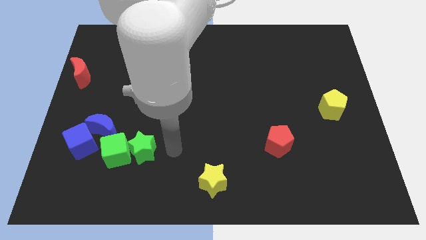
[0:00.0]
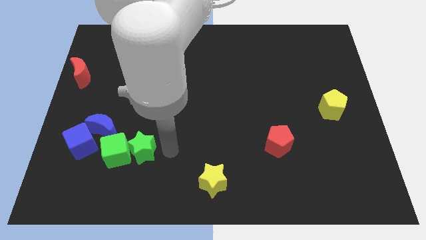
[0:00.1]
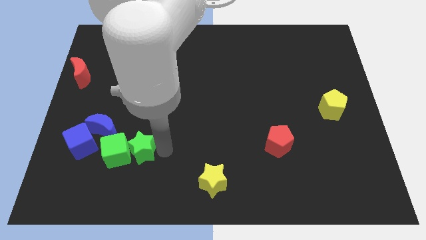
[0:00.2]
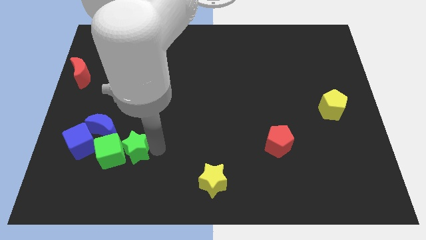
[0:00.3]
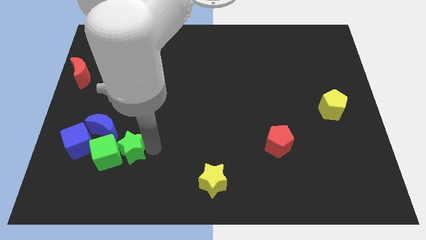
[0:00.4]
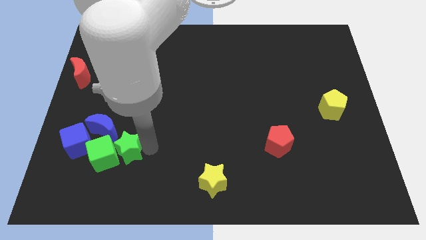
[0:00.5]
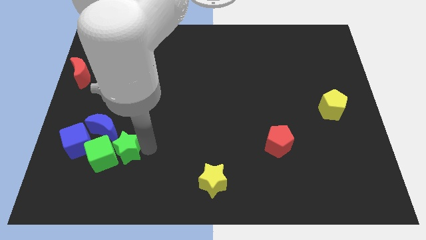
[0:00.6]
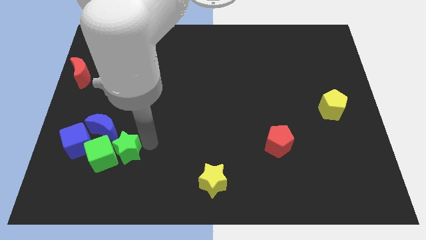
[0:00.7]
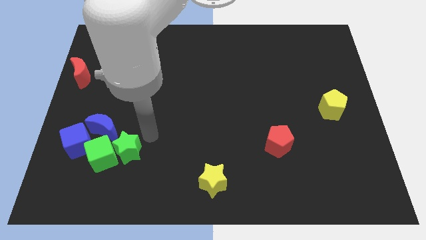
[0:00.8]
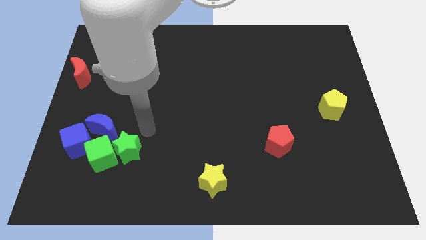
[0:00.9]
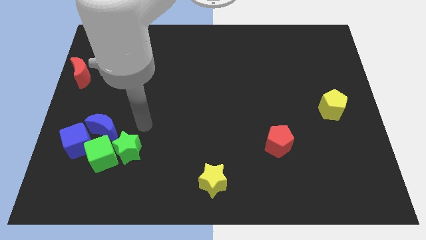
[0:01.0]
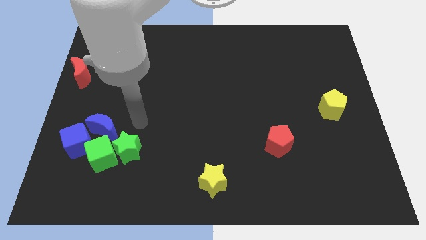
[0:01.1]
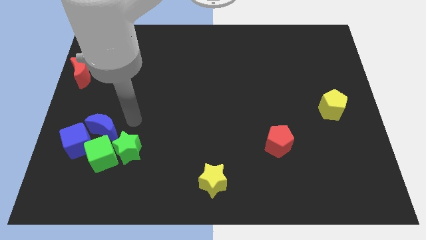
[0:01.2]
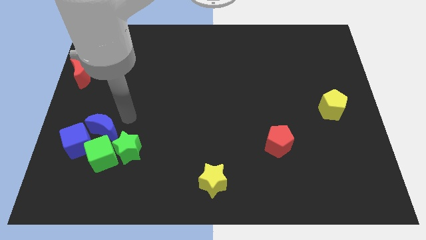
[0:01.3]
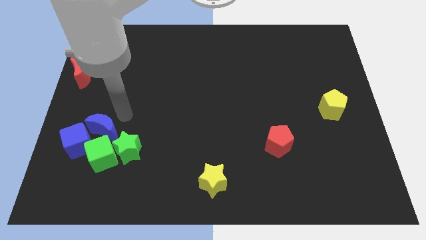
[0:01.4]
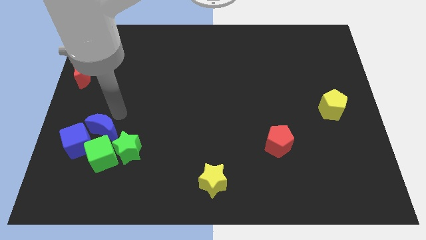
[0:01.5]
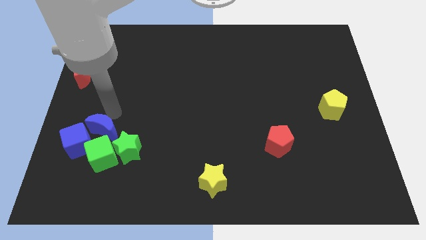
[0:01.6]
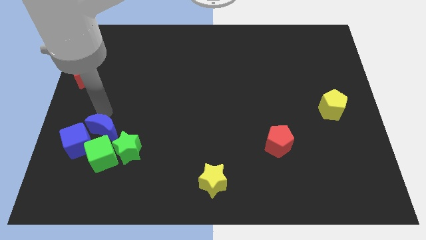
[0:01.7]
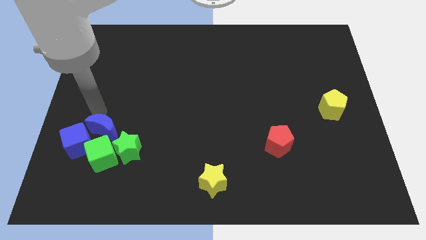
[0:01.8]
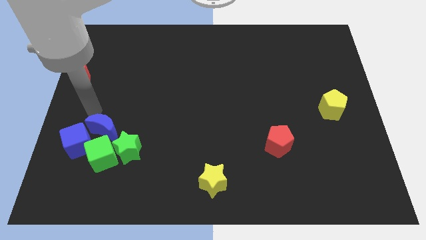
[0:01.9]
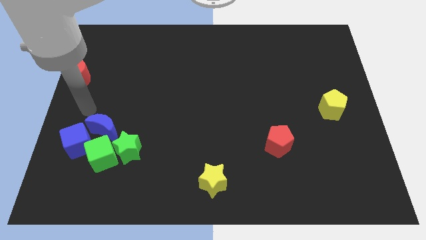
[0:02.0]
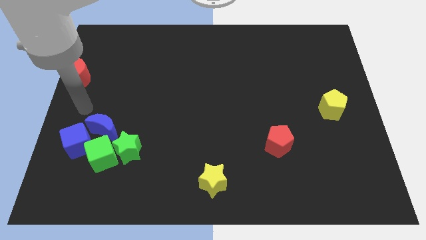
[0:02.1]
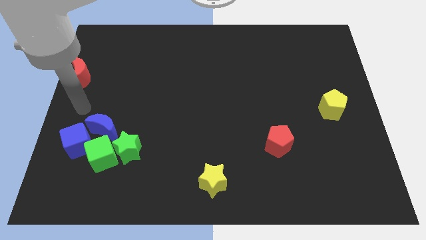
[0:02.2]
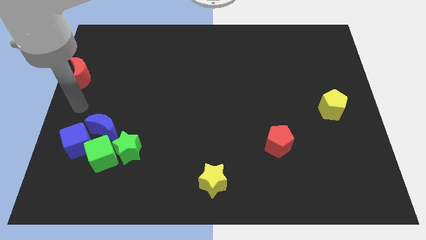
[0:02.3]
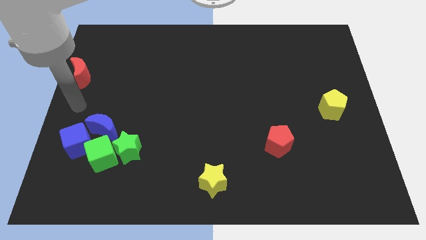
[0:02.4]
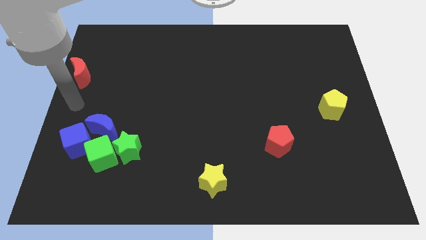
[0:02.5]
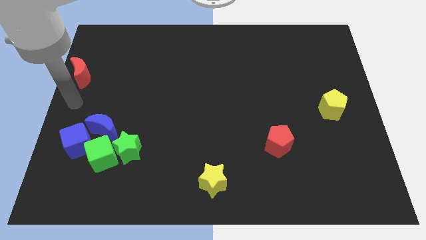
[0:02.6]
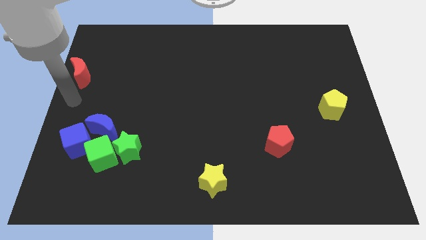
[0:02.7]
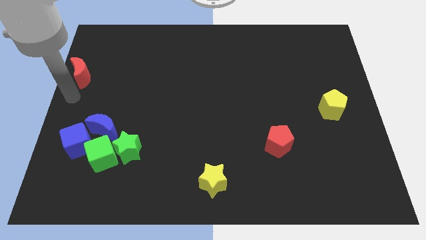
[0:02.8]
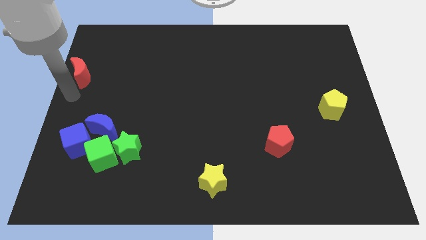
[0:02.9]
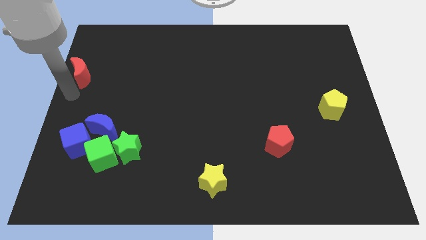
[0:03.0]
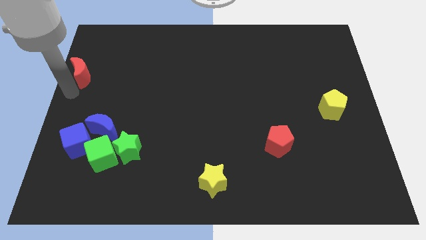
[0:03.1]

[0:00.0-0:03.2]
move the arm towards the bottom of the red crescent

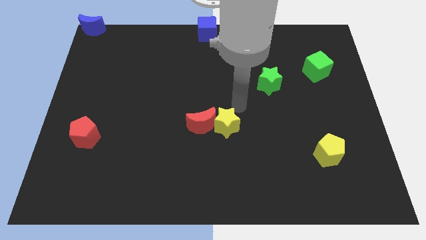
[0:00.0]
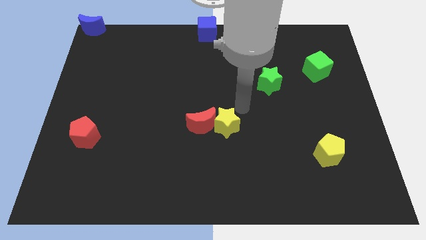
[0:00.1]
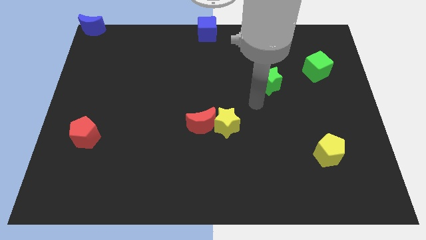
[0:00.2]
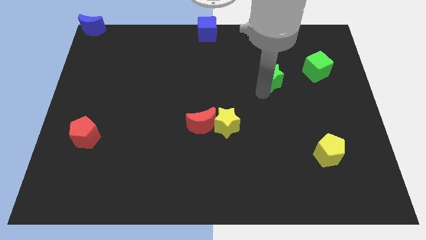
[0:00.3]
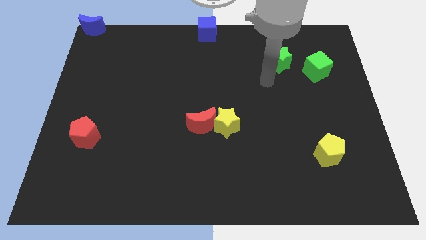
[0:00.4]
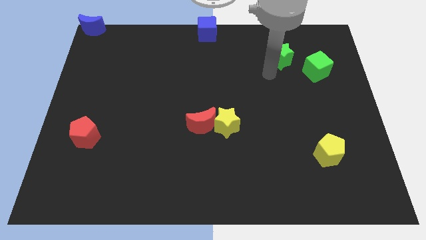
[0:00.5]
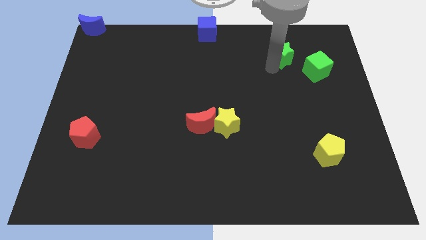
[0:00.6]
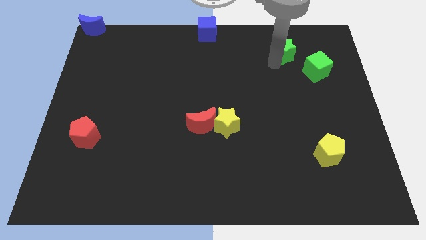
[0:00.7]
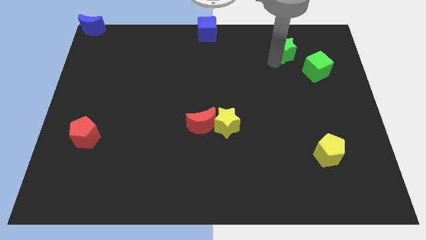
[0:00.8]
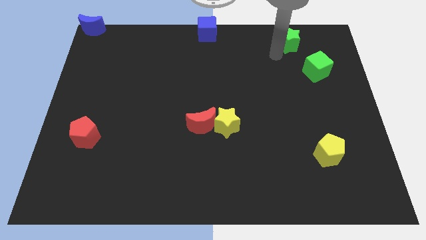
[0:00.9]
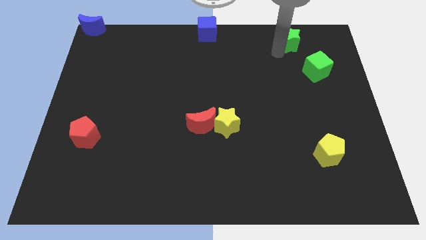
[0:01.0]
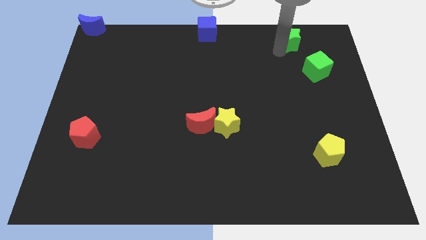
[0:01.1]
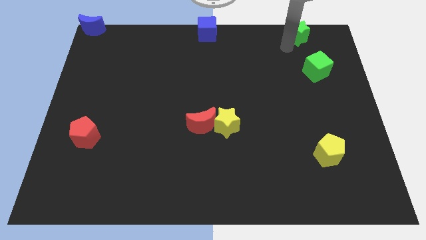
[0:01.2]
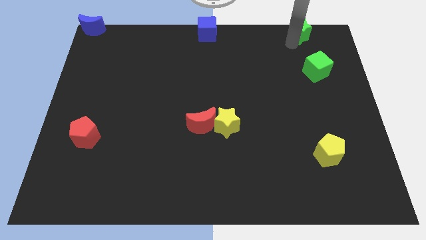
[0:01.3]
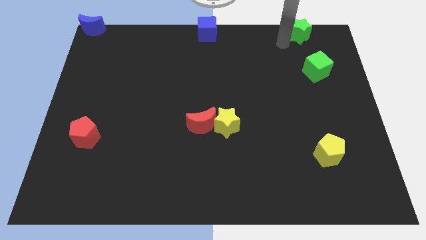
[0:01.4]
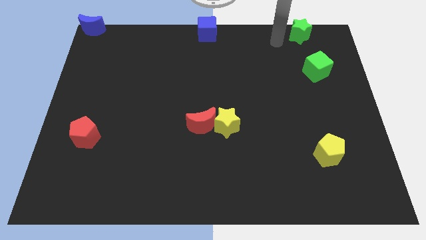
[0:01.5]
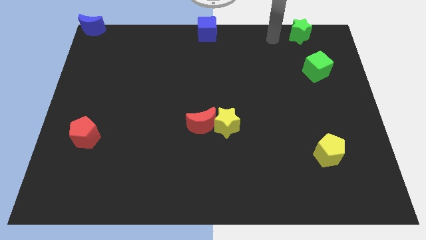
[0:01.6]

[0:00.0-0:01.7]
push the green star to the top of green cube

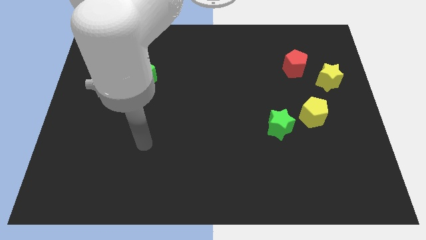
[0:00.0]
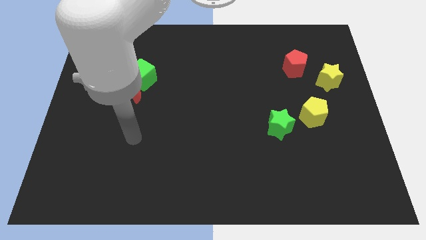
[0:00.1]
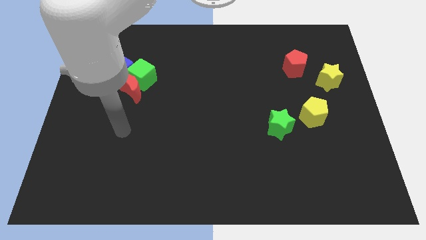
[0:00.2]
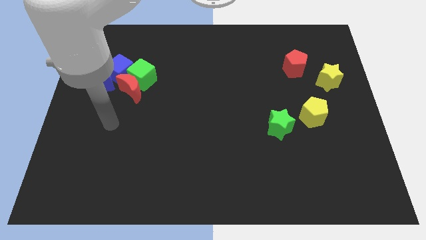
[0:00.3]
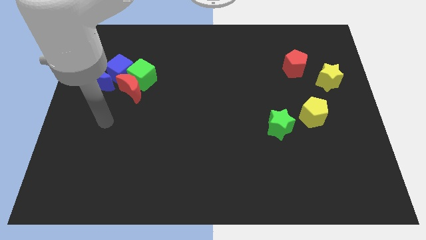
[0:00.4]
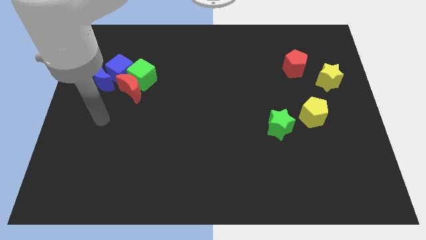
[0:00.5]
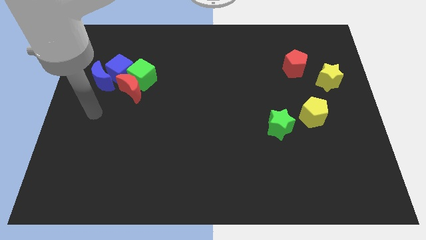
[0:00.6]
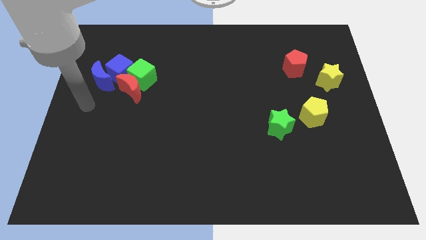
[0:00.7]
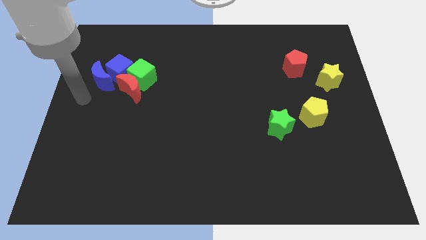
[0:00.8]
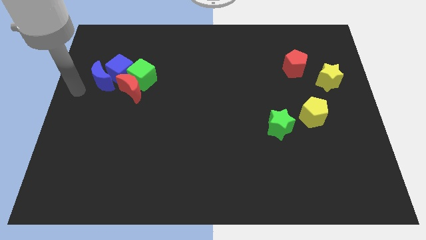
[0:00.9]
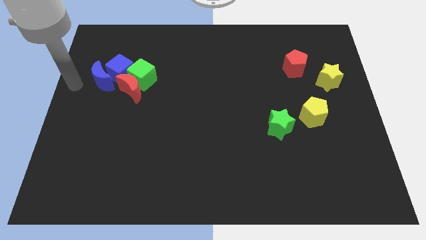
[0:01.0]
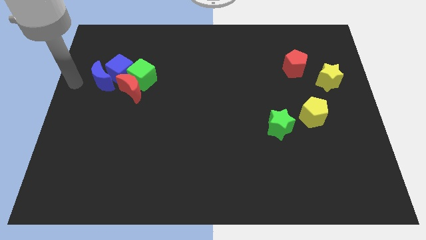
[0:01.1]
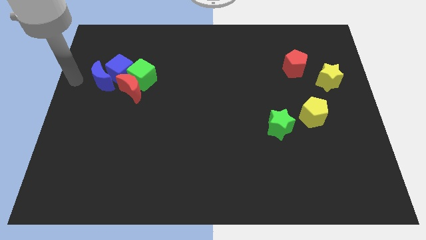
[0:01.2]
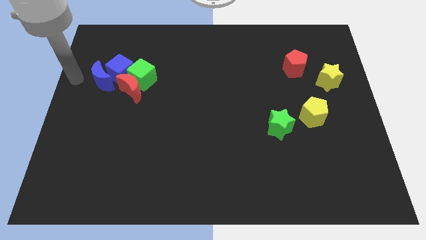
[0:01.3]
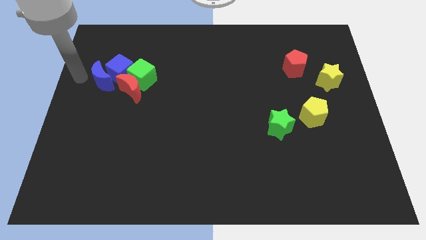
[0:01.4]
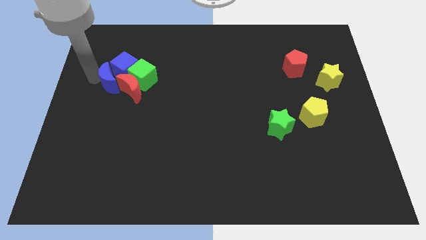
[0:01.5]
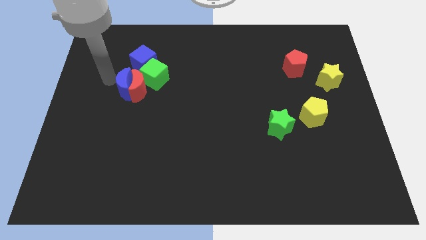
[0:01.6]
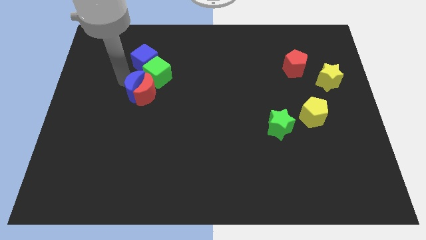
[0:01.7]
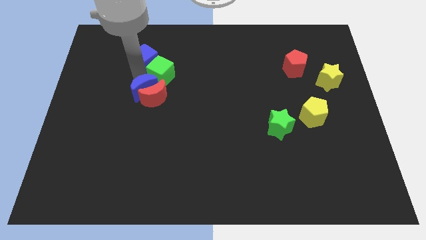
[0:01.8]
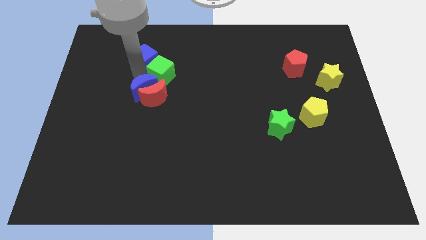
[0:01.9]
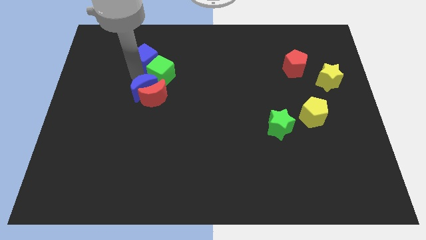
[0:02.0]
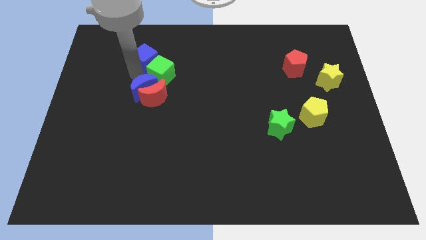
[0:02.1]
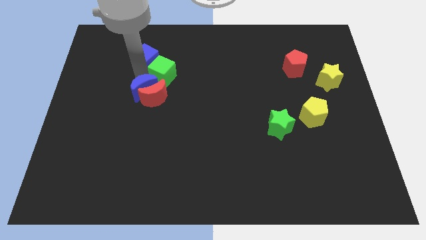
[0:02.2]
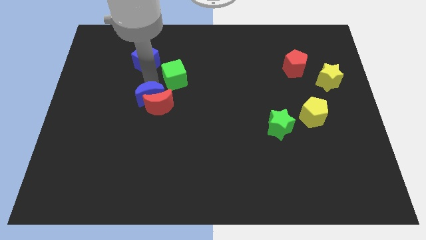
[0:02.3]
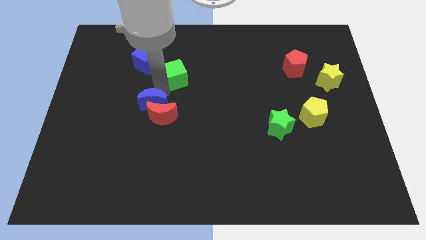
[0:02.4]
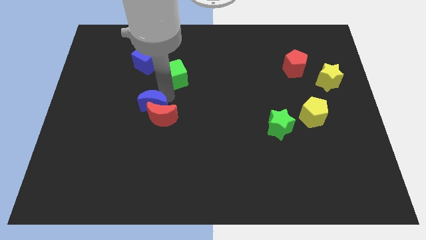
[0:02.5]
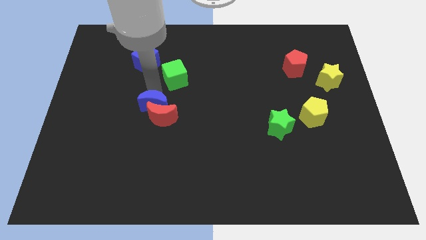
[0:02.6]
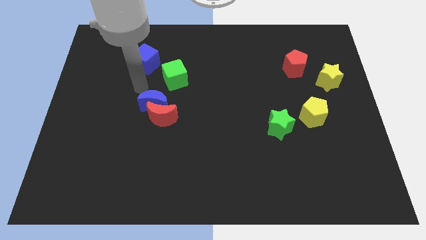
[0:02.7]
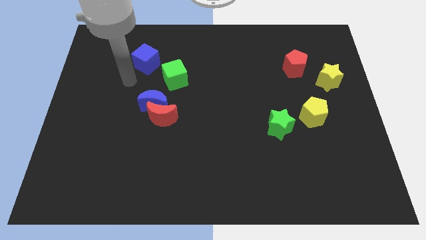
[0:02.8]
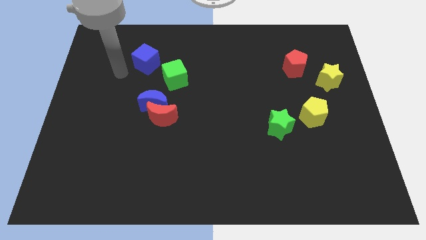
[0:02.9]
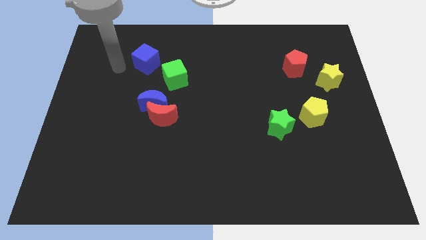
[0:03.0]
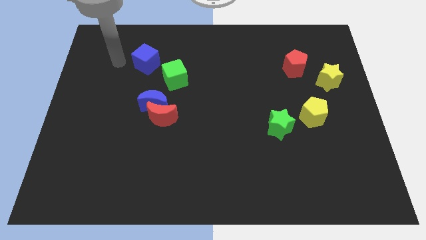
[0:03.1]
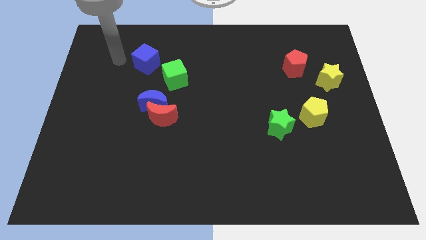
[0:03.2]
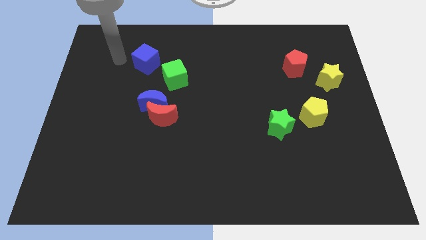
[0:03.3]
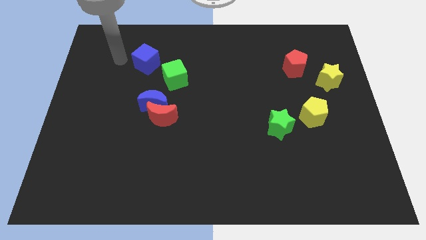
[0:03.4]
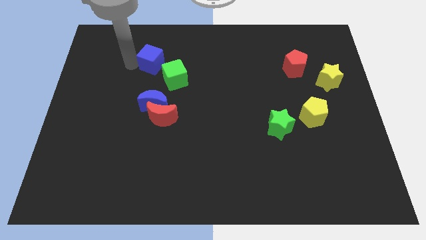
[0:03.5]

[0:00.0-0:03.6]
push the blue moon into the red moon

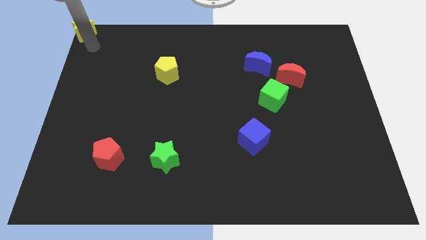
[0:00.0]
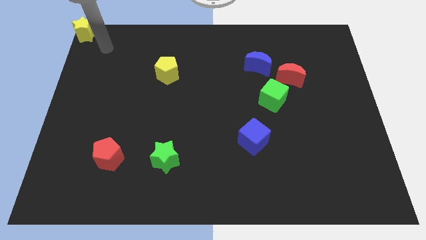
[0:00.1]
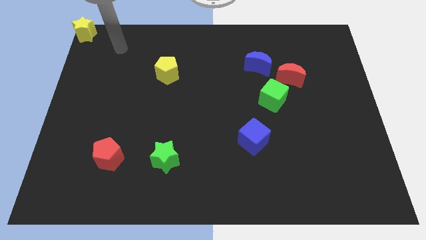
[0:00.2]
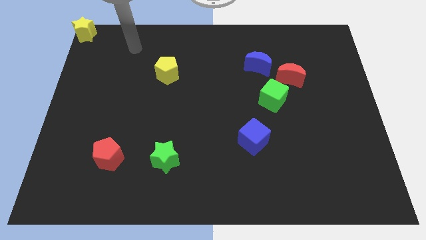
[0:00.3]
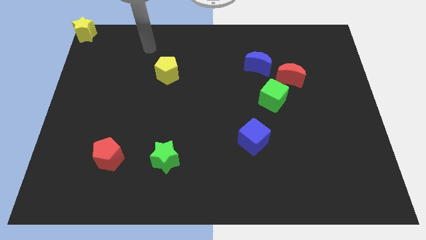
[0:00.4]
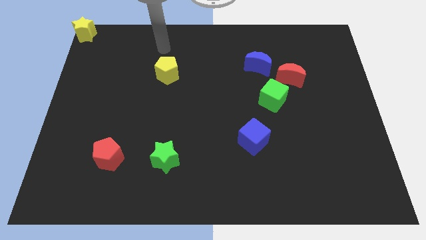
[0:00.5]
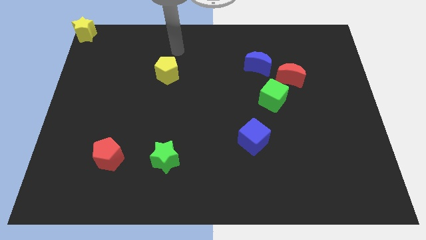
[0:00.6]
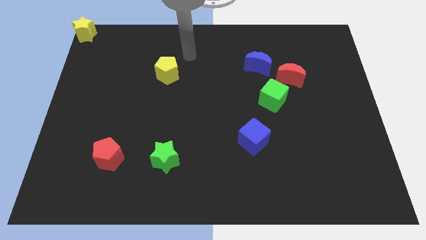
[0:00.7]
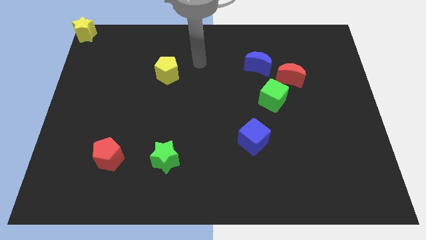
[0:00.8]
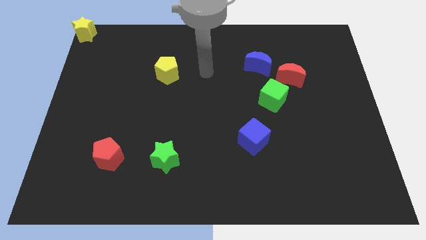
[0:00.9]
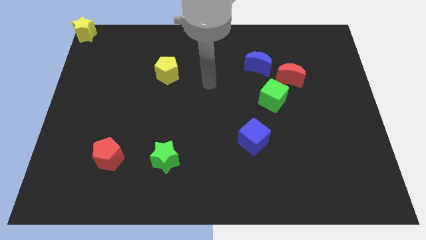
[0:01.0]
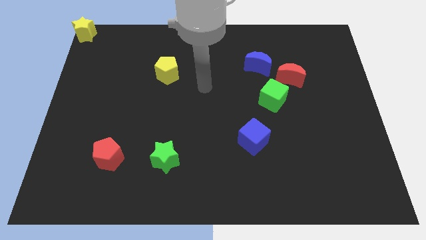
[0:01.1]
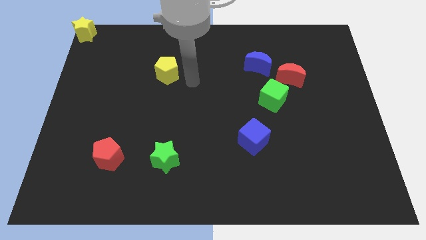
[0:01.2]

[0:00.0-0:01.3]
move your arm towards the yellow pentagon
